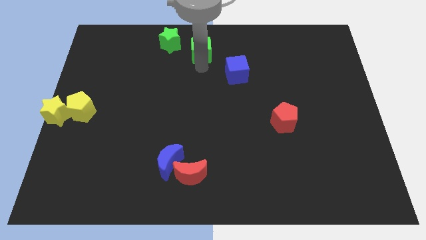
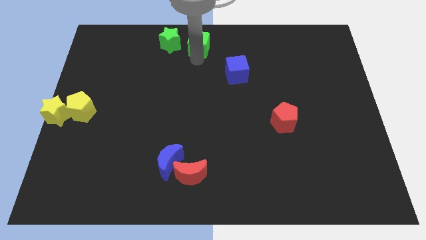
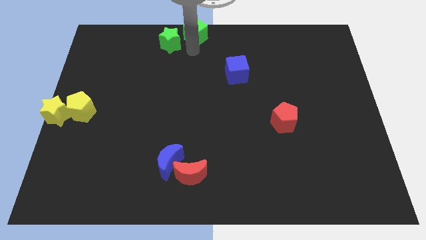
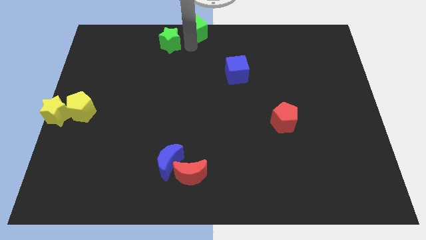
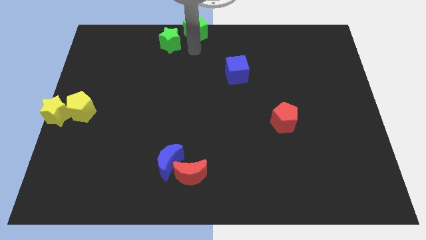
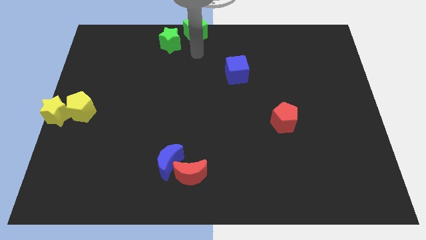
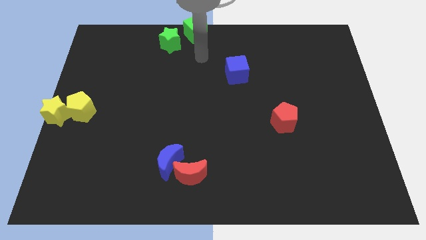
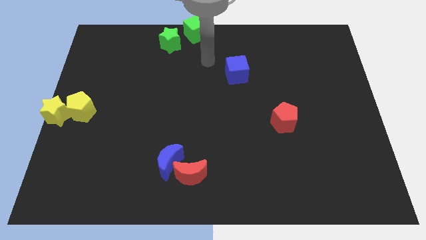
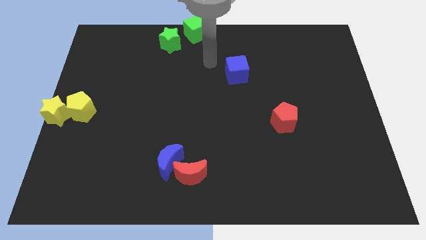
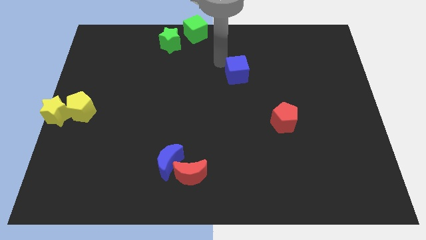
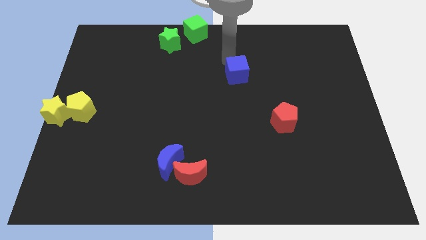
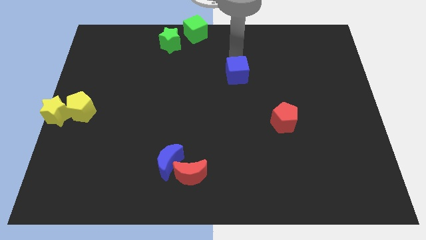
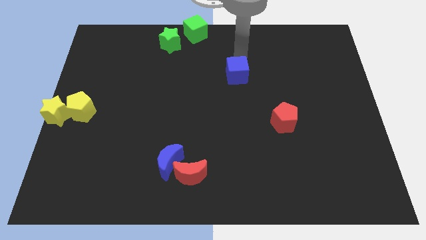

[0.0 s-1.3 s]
place the green cube diagonal to blue cube

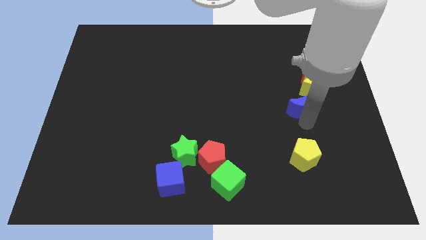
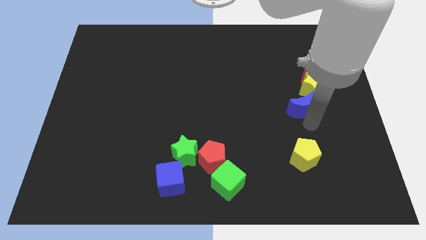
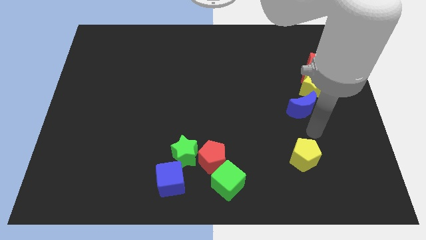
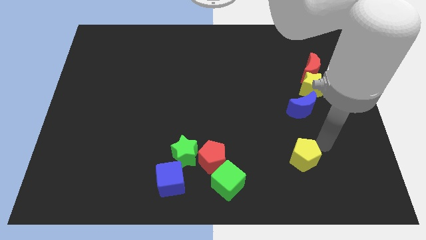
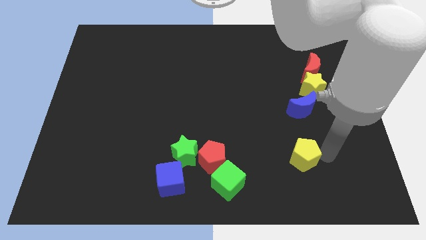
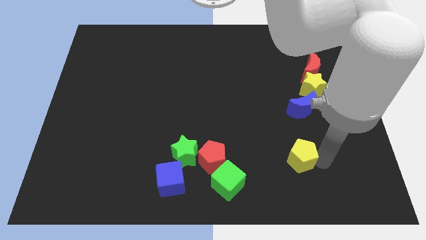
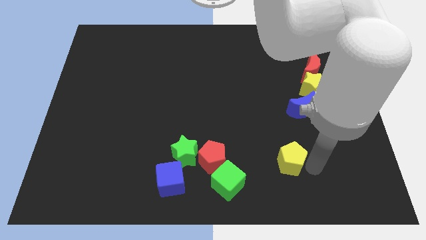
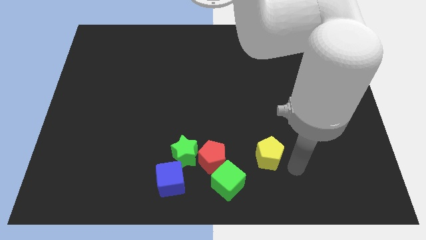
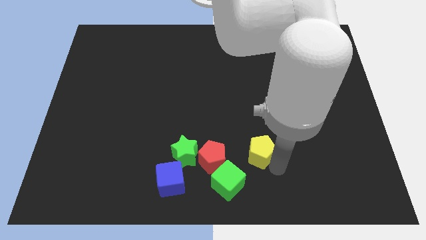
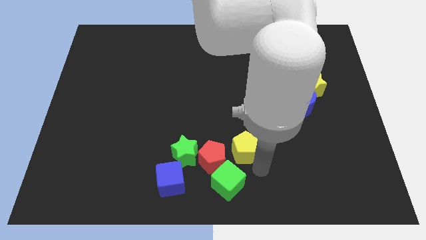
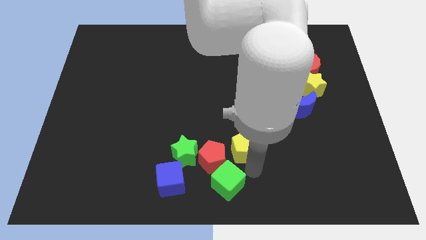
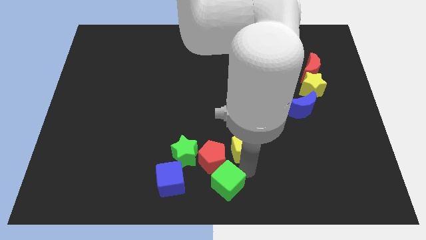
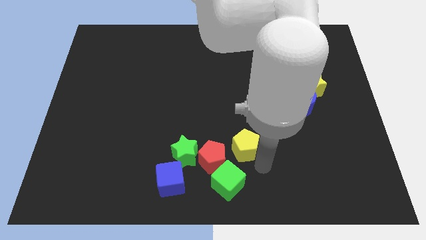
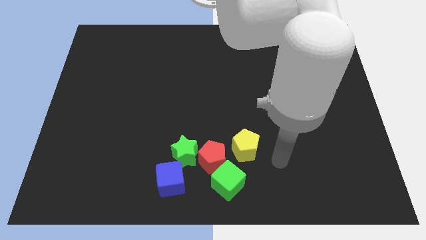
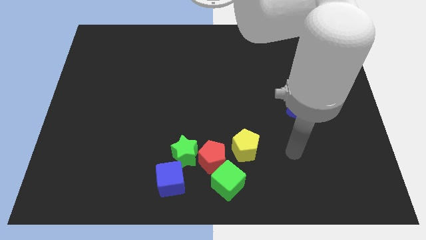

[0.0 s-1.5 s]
move the yellow pentagon near to the red pentagon

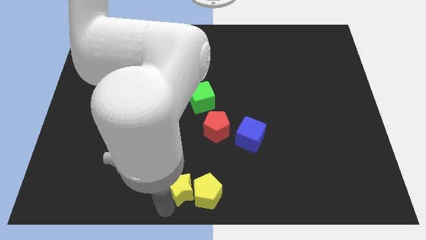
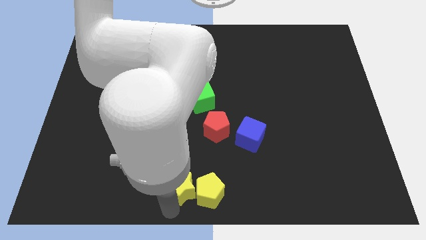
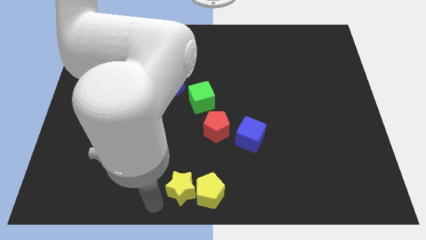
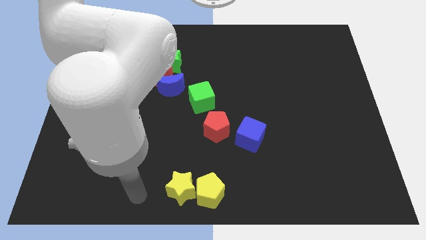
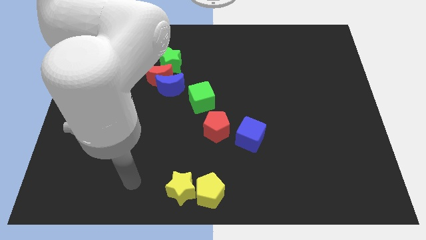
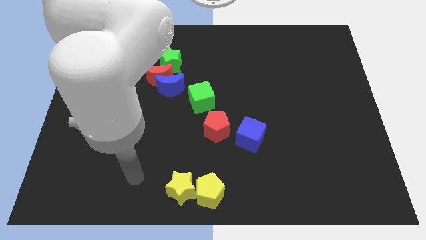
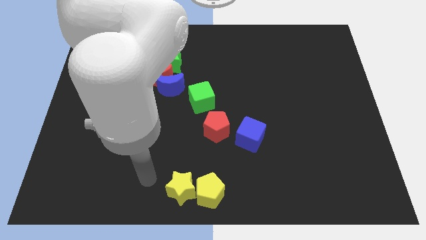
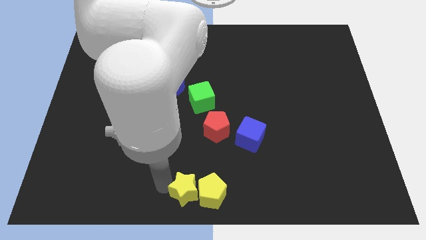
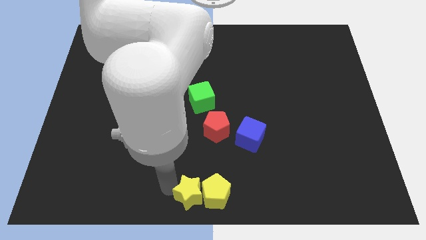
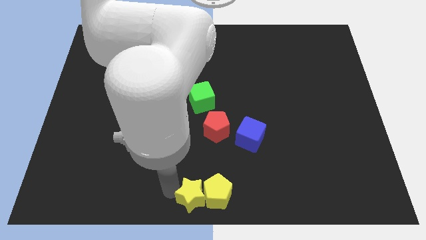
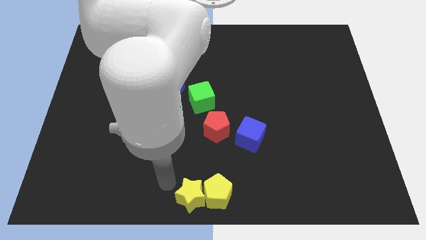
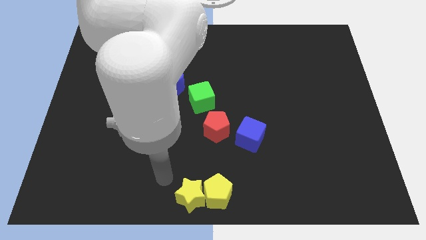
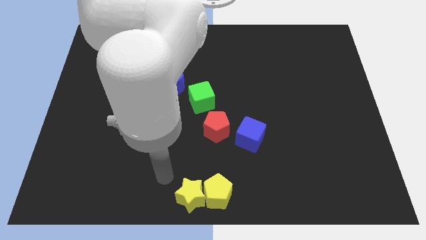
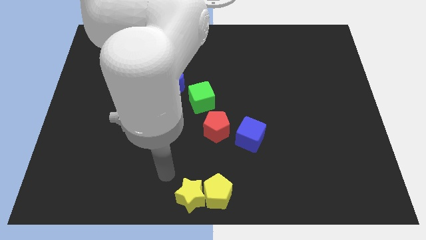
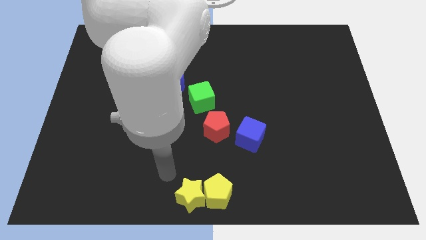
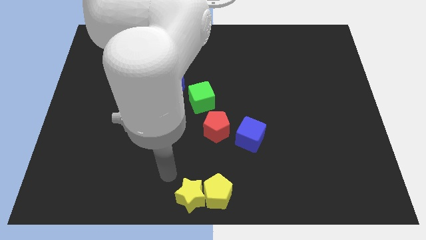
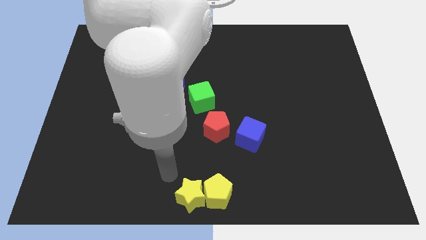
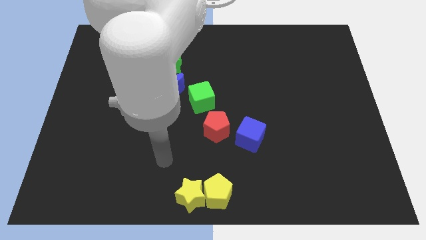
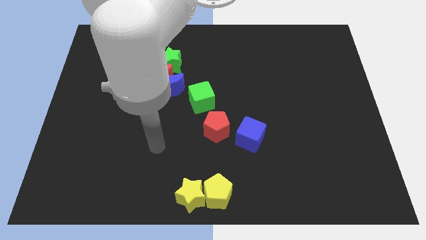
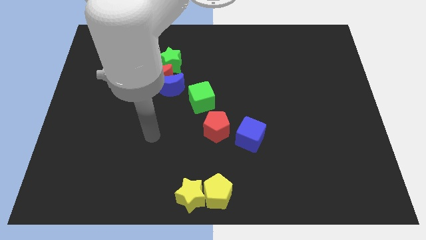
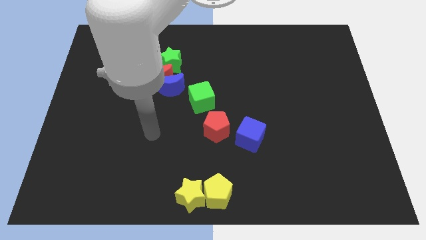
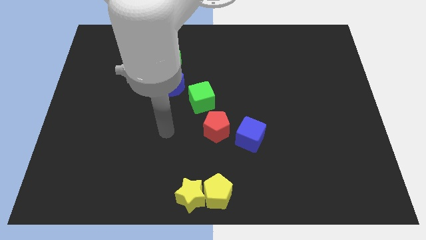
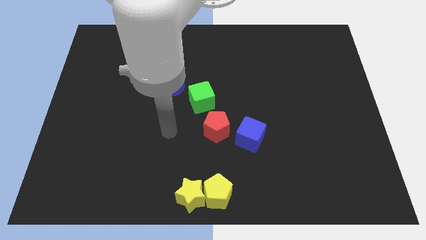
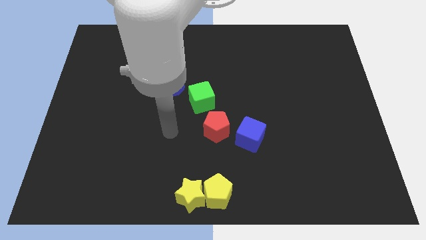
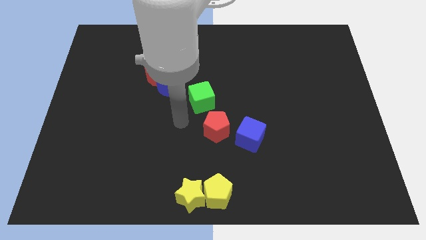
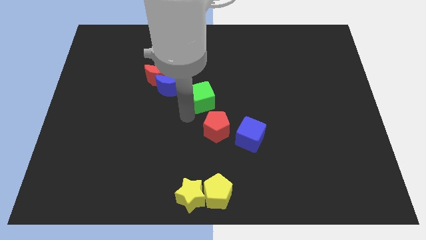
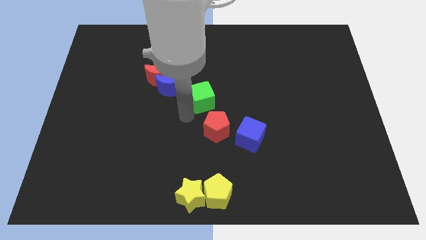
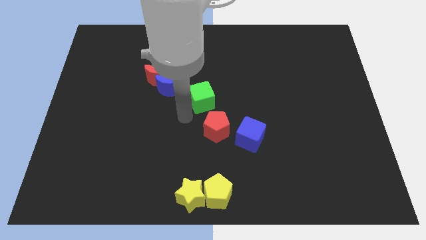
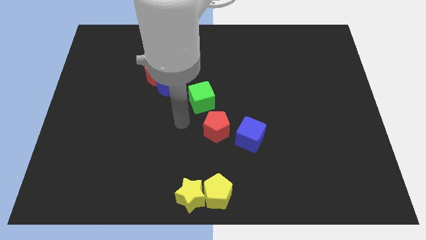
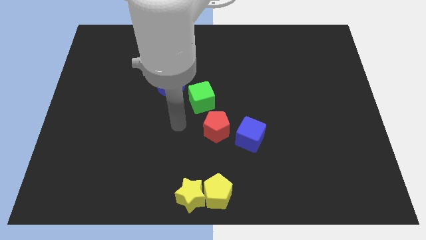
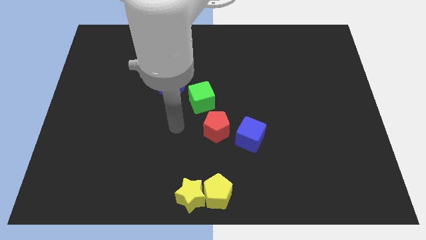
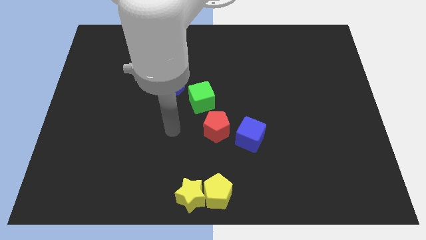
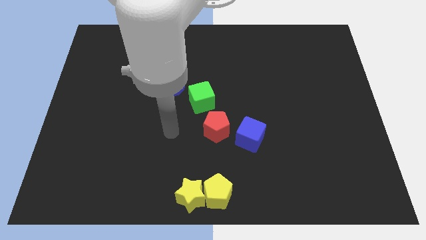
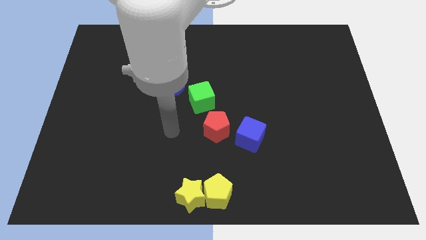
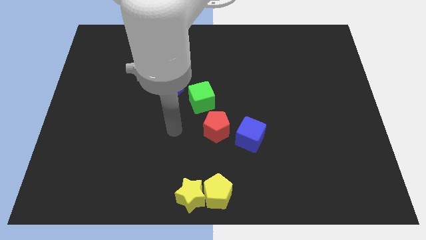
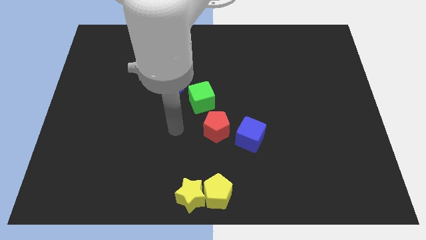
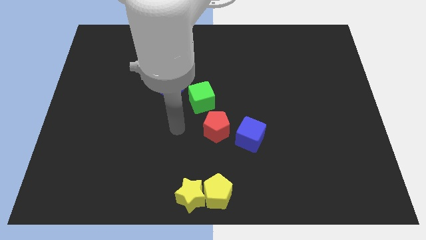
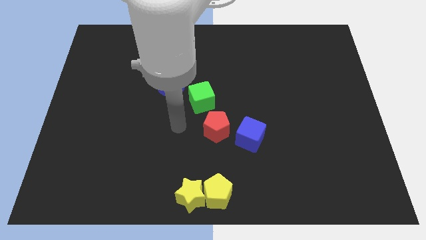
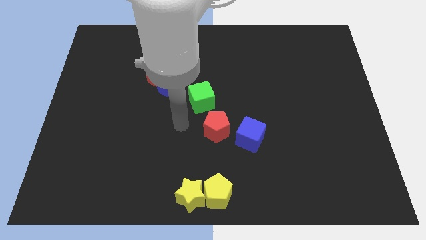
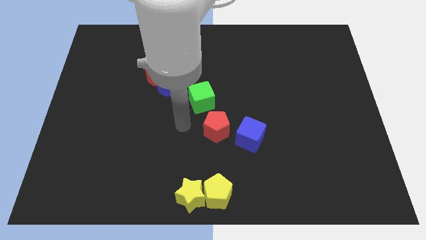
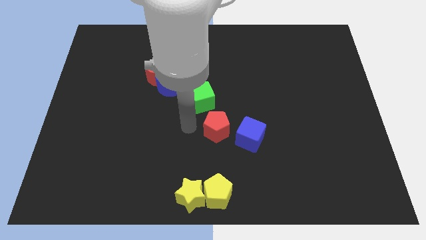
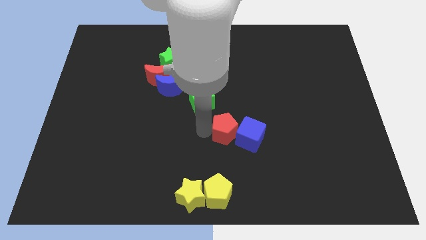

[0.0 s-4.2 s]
place the arm left to the red pentagon

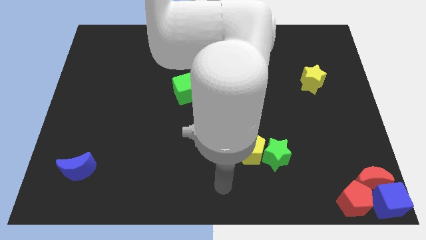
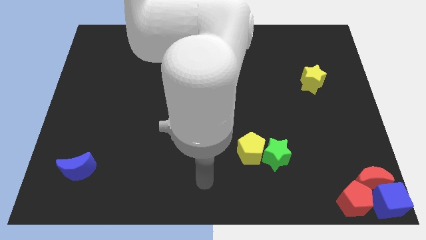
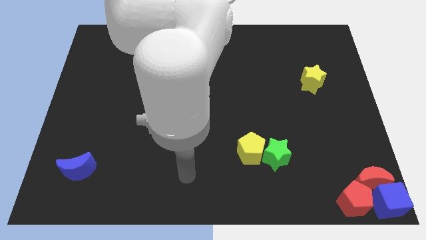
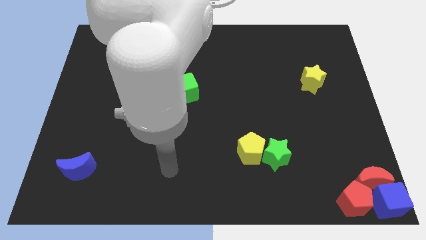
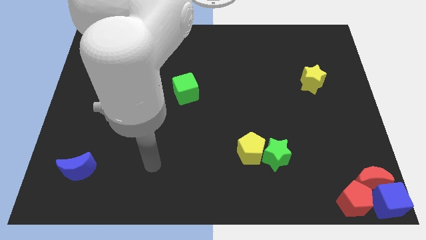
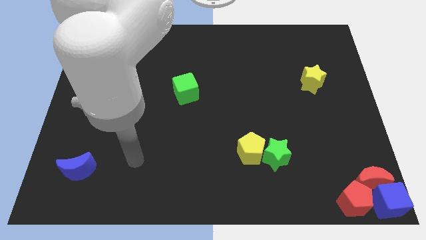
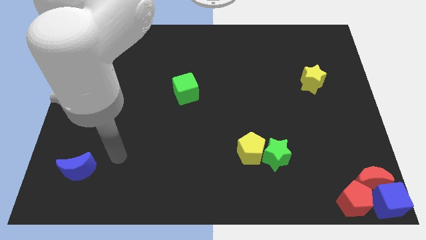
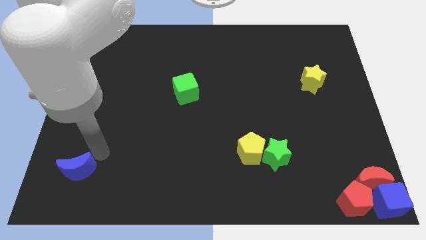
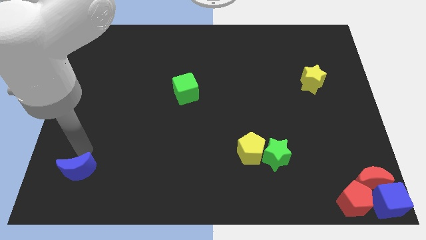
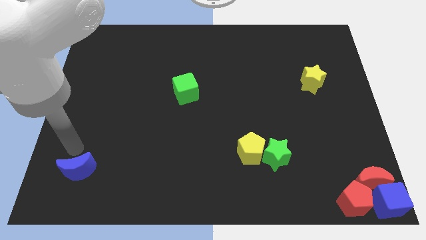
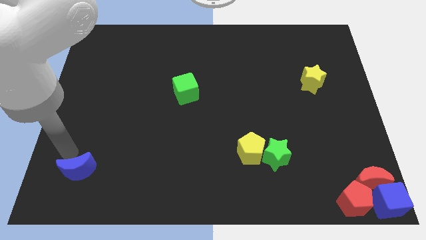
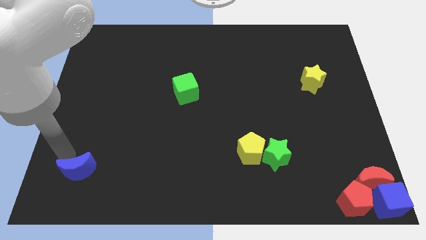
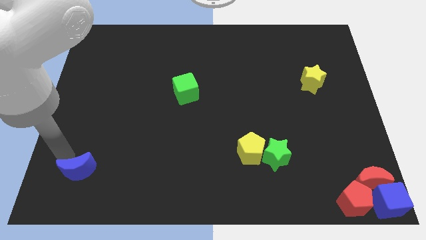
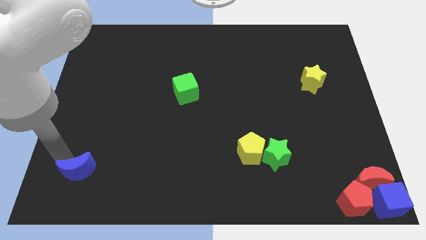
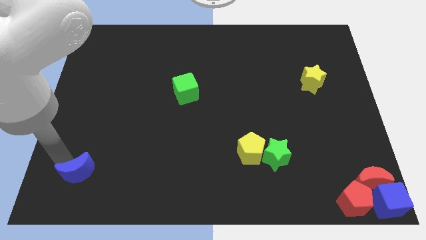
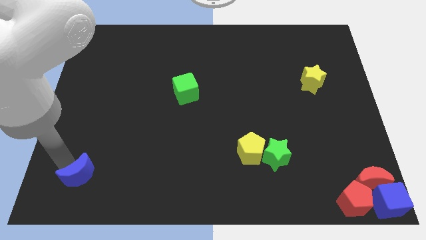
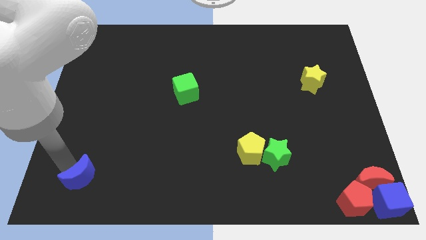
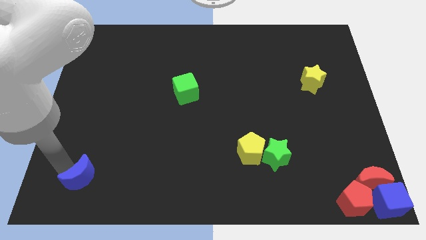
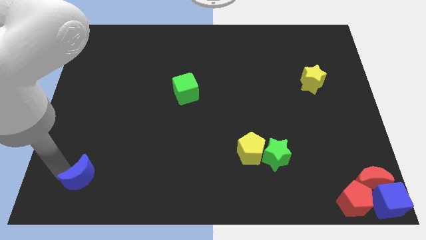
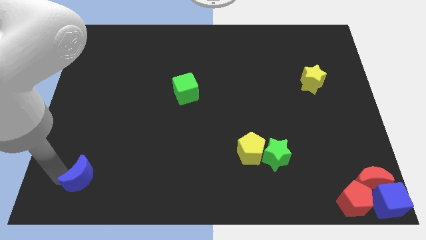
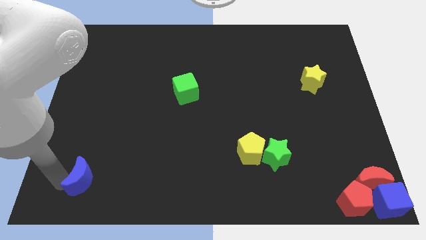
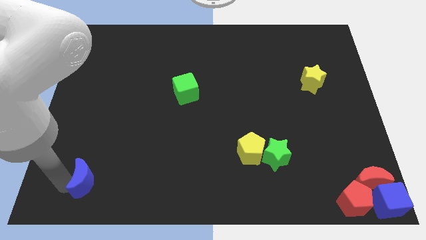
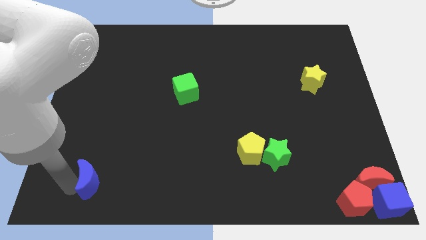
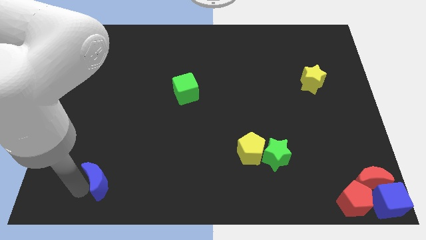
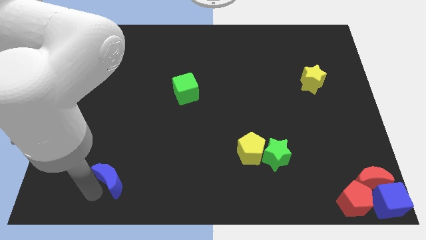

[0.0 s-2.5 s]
move blue crescent towards right side
